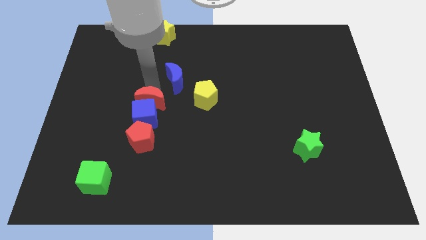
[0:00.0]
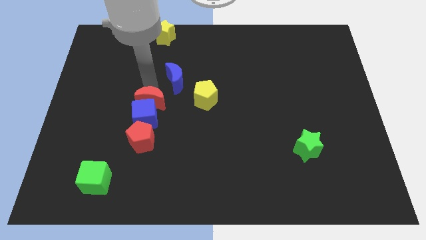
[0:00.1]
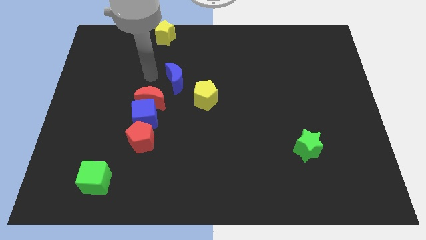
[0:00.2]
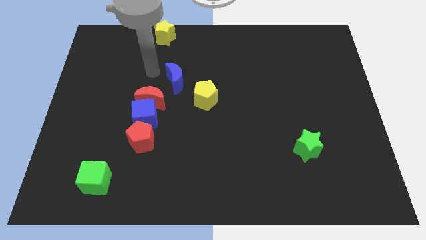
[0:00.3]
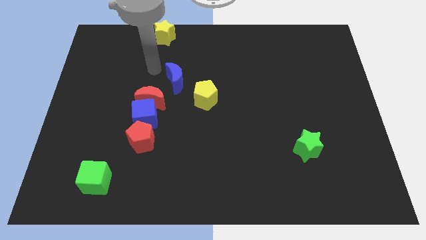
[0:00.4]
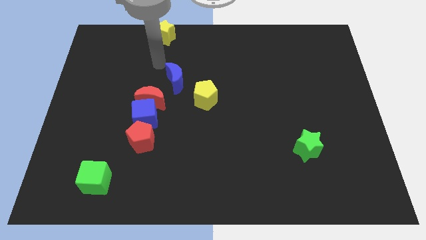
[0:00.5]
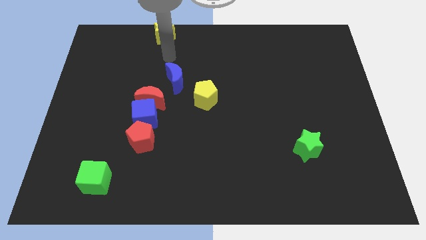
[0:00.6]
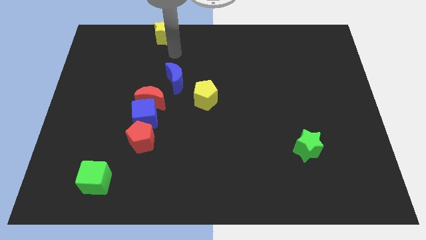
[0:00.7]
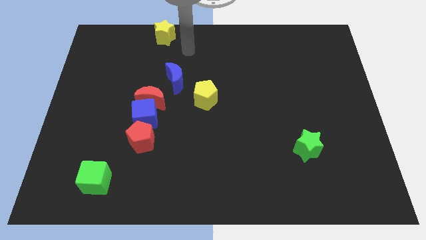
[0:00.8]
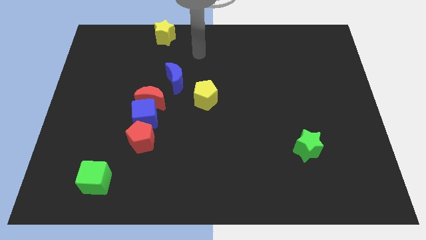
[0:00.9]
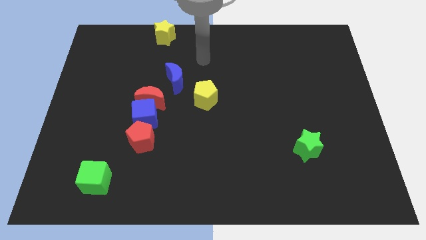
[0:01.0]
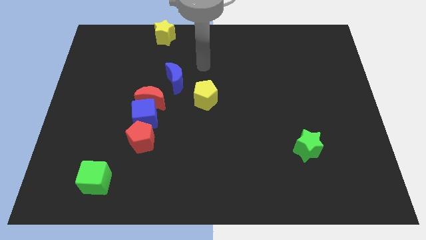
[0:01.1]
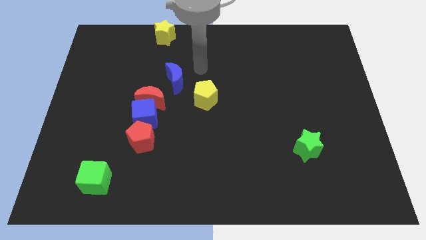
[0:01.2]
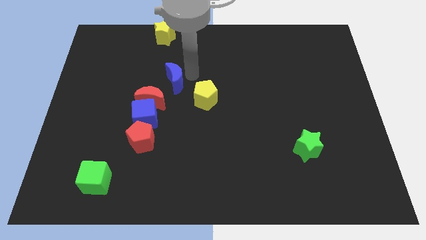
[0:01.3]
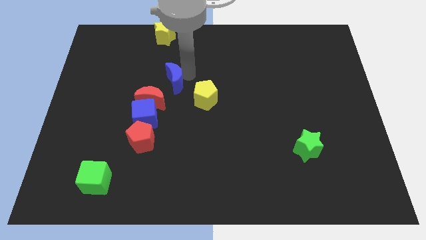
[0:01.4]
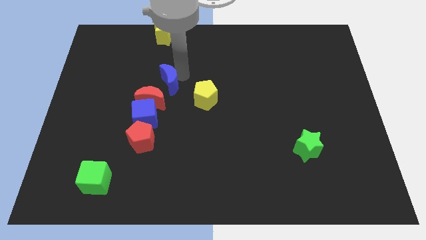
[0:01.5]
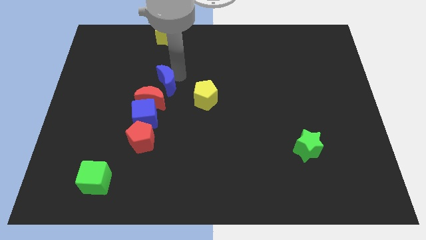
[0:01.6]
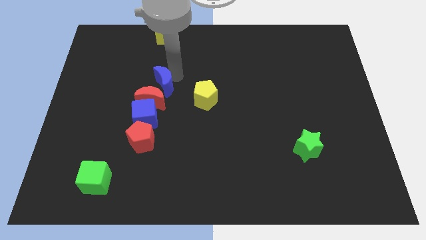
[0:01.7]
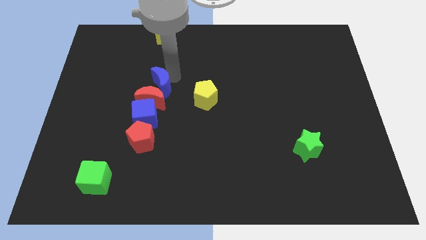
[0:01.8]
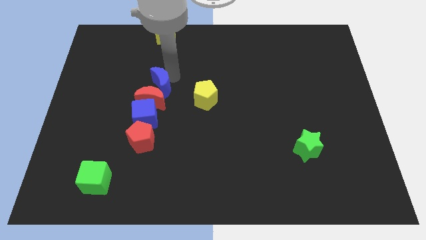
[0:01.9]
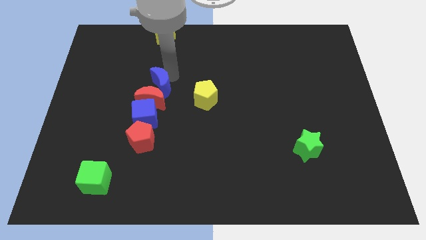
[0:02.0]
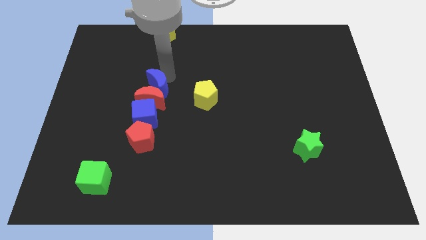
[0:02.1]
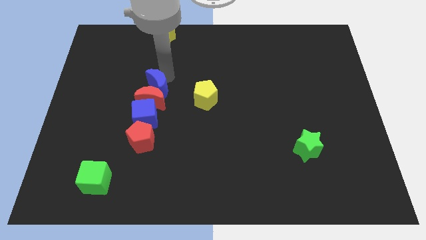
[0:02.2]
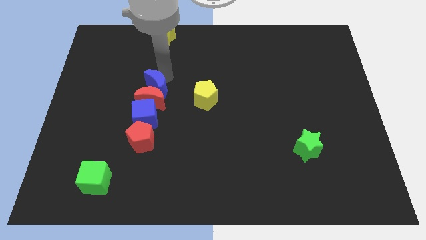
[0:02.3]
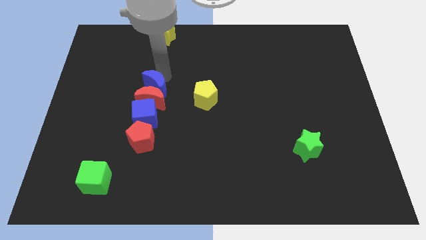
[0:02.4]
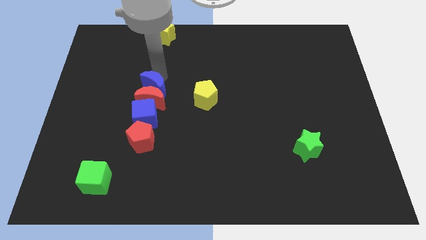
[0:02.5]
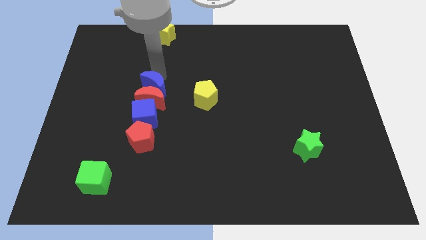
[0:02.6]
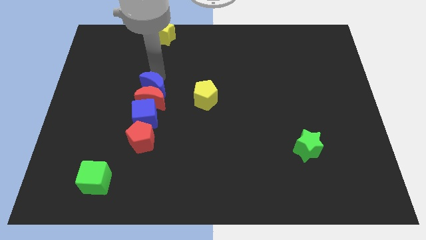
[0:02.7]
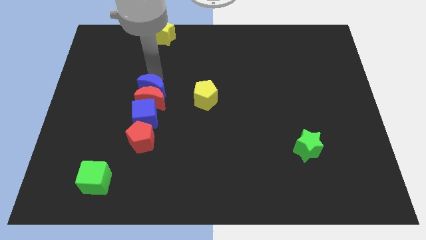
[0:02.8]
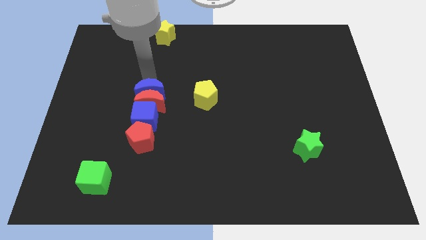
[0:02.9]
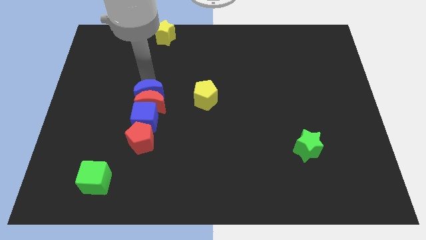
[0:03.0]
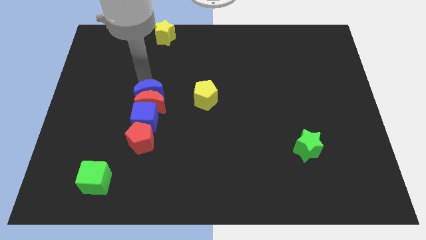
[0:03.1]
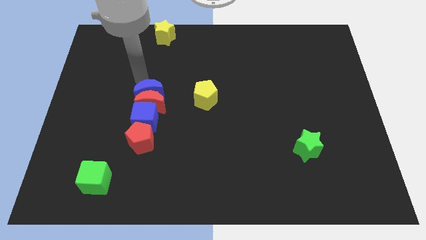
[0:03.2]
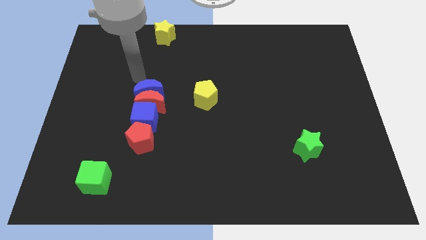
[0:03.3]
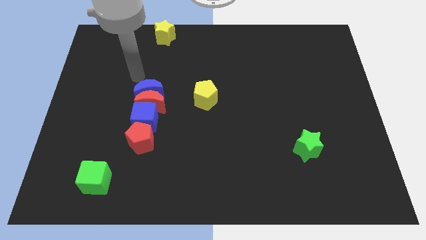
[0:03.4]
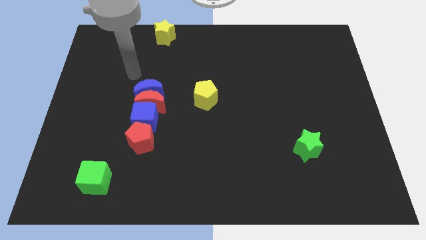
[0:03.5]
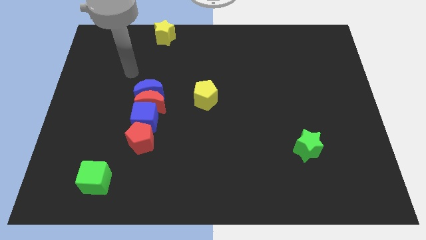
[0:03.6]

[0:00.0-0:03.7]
place the blue moon above the red moon

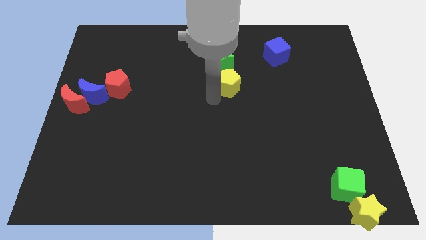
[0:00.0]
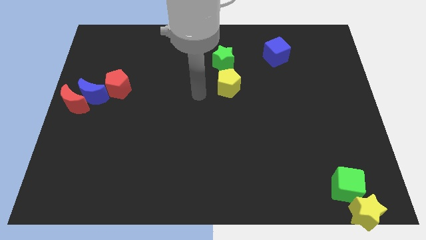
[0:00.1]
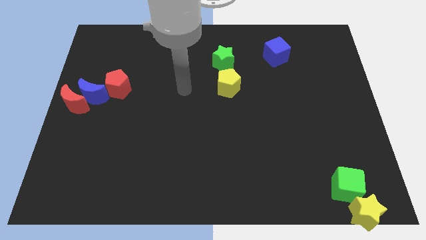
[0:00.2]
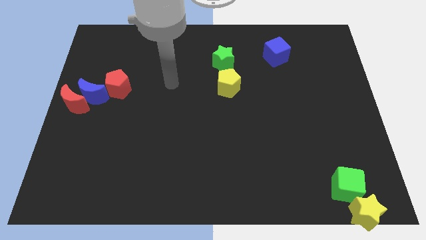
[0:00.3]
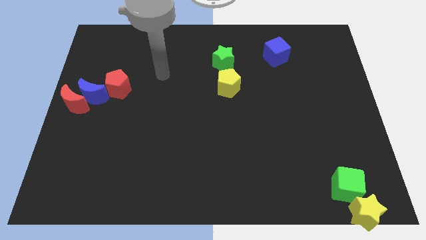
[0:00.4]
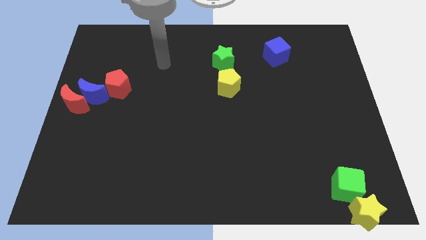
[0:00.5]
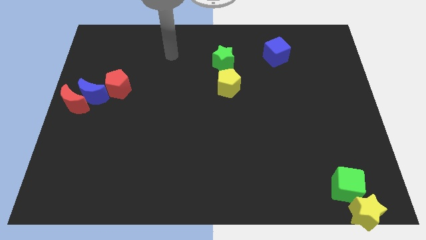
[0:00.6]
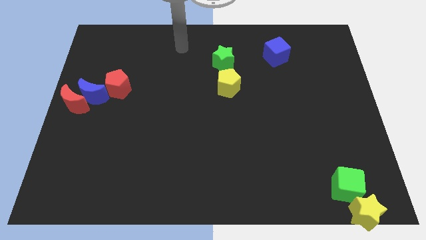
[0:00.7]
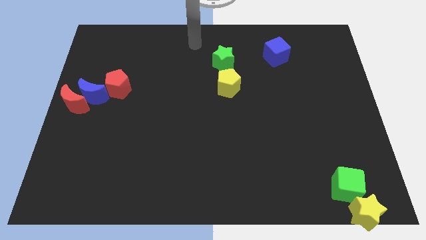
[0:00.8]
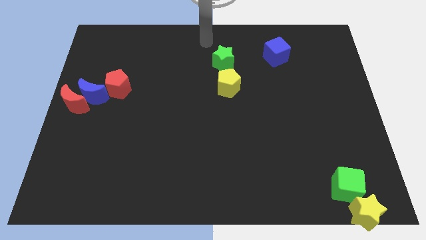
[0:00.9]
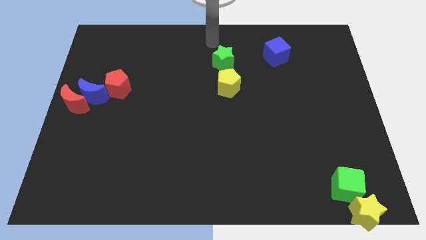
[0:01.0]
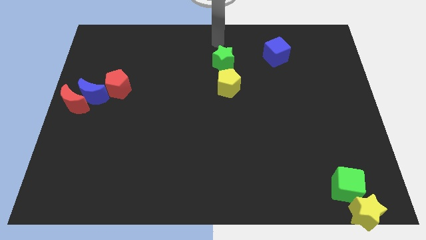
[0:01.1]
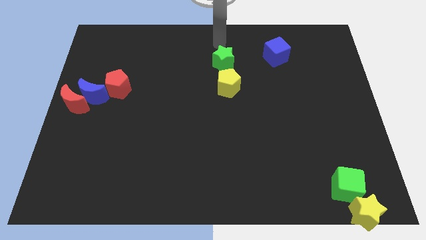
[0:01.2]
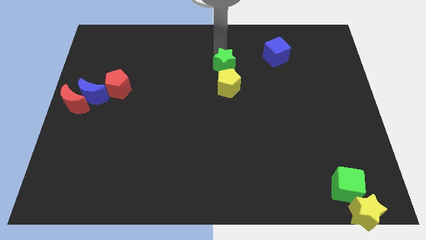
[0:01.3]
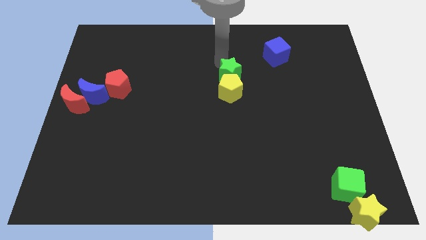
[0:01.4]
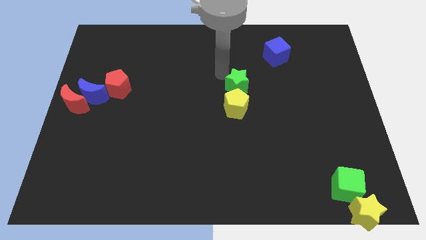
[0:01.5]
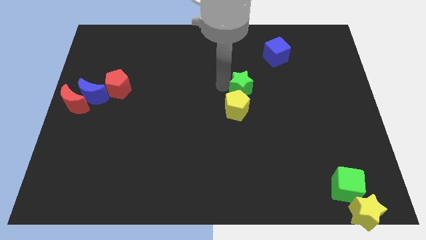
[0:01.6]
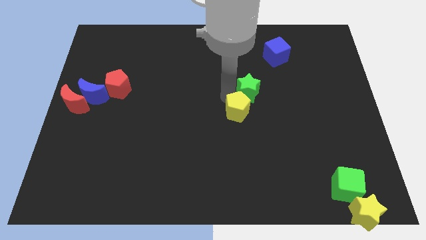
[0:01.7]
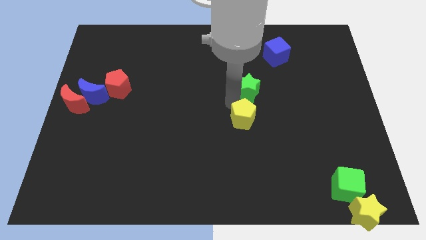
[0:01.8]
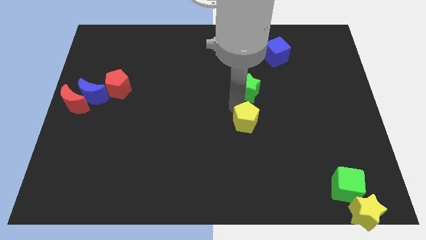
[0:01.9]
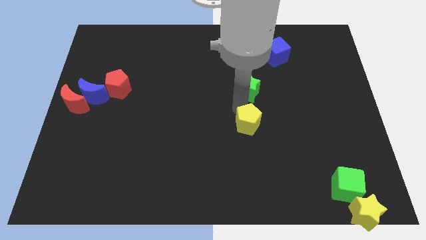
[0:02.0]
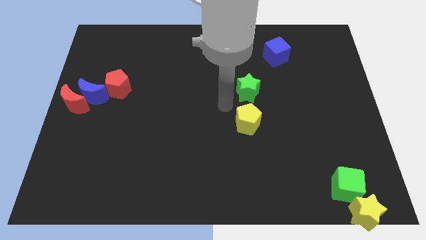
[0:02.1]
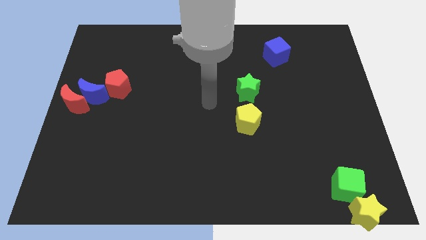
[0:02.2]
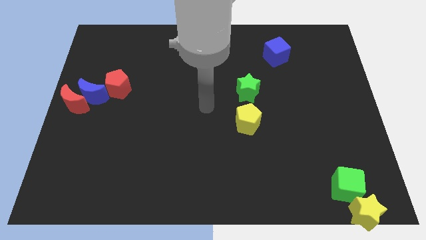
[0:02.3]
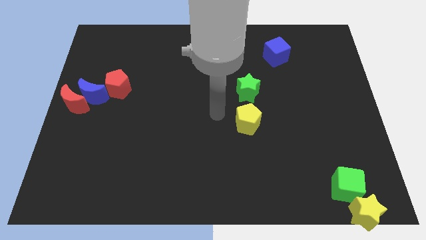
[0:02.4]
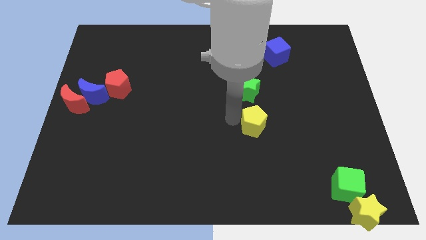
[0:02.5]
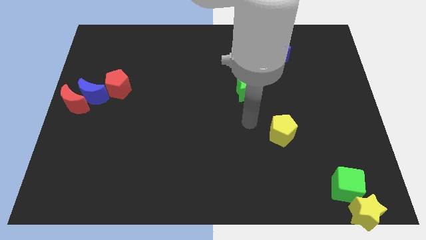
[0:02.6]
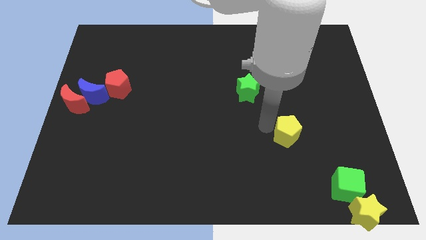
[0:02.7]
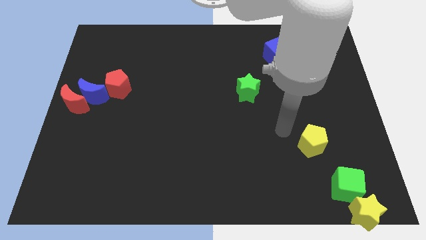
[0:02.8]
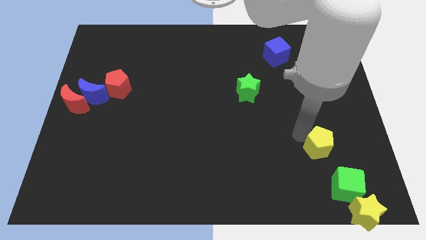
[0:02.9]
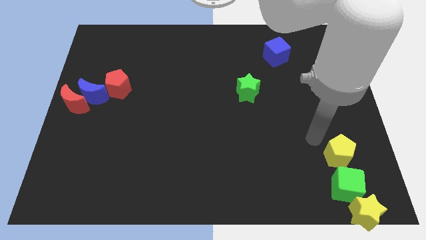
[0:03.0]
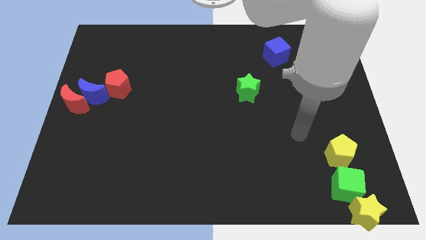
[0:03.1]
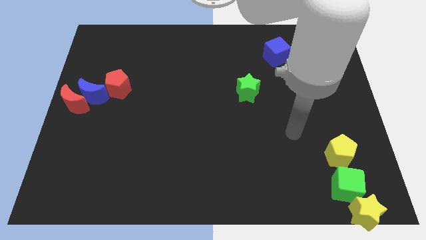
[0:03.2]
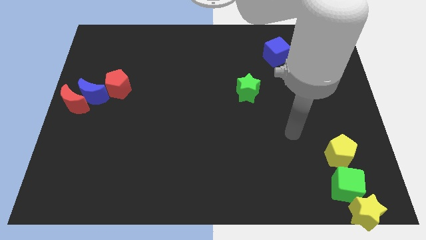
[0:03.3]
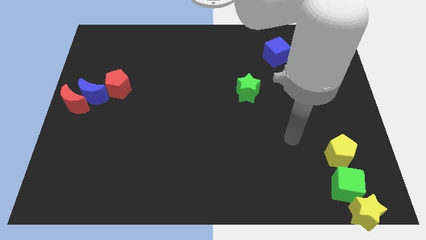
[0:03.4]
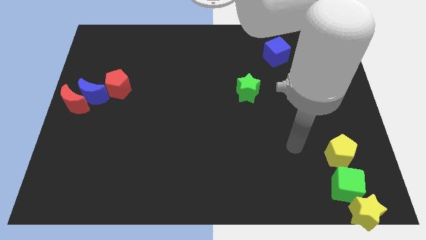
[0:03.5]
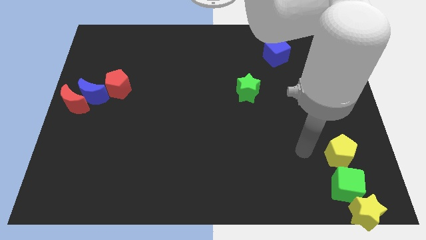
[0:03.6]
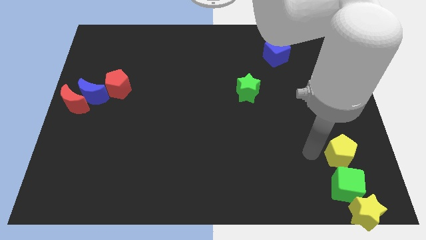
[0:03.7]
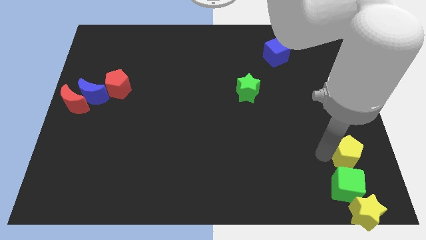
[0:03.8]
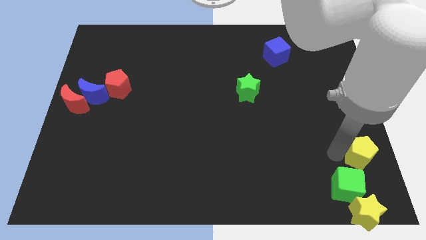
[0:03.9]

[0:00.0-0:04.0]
place the yellow pentagon above the green cube

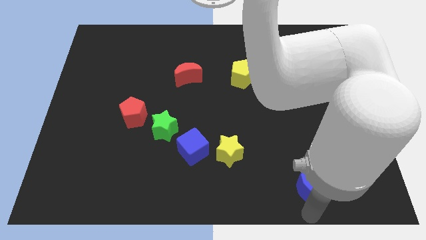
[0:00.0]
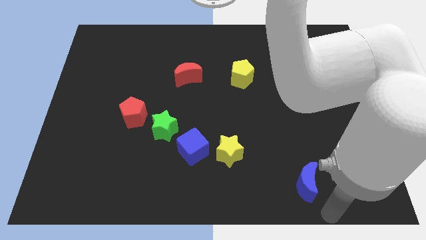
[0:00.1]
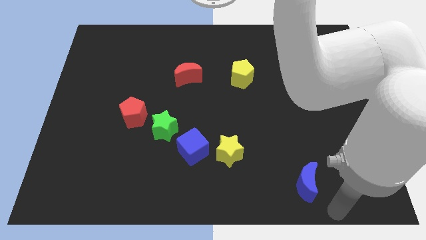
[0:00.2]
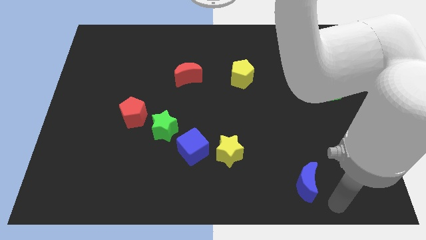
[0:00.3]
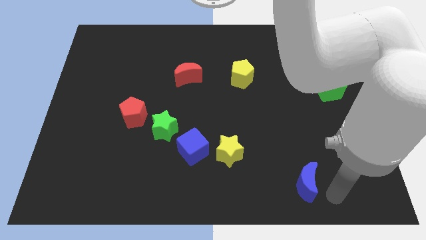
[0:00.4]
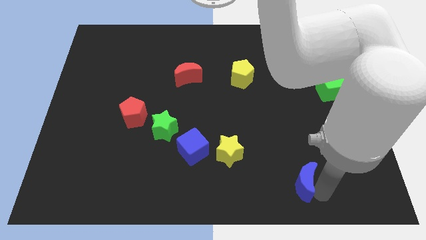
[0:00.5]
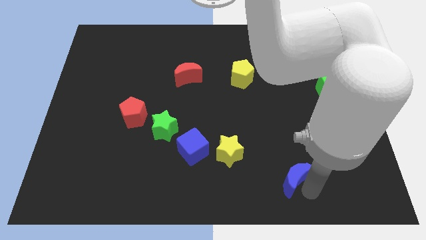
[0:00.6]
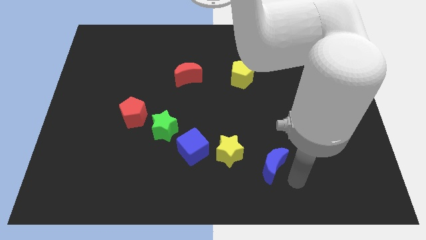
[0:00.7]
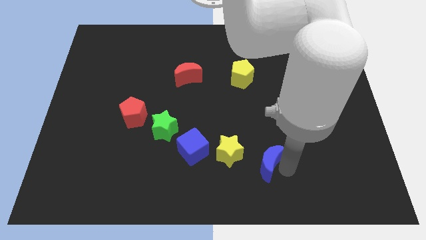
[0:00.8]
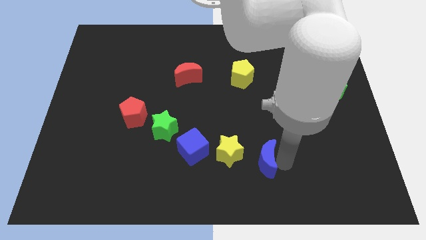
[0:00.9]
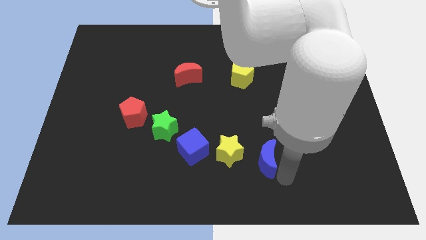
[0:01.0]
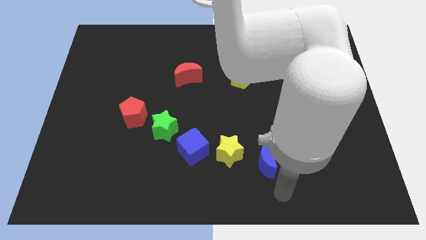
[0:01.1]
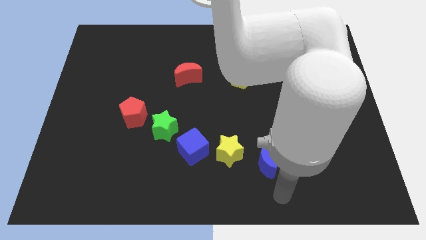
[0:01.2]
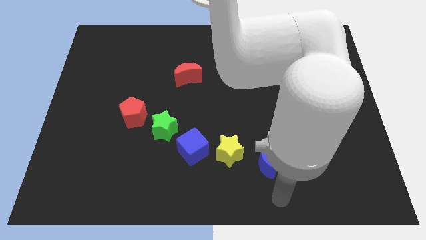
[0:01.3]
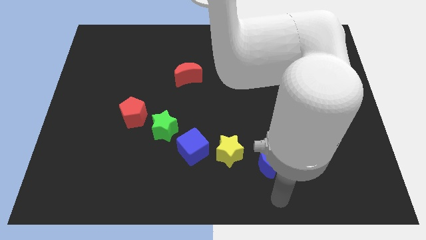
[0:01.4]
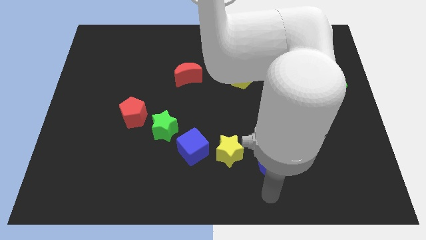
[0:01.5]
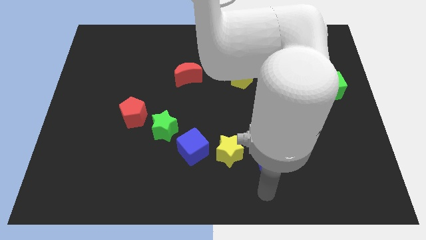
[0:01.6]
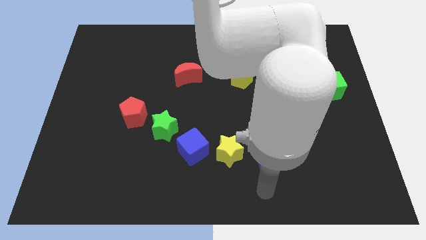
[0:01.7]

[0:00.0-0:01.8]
put the blue moon right to the yellow star
